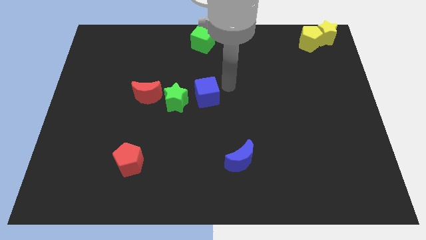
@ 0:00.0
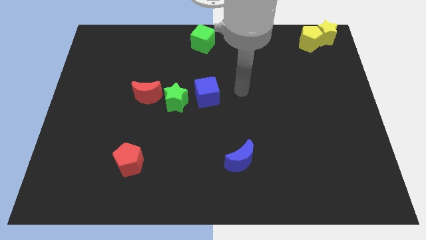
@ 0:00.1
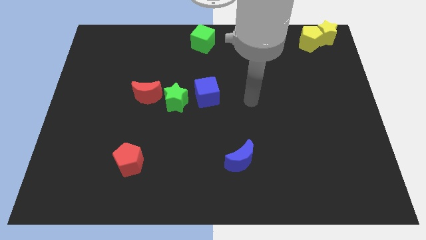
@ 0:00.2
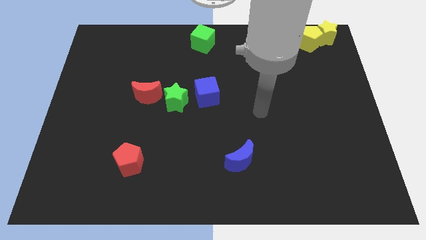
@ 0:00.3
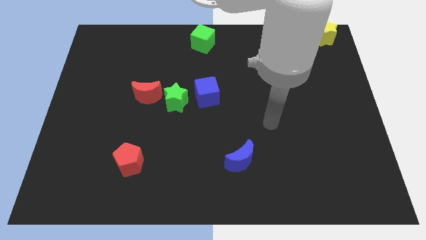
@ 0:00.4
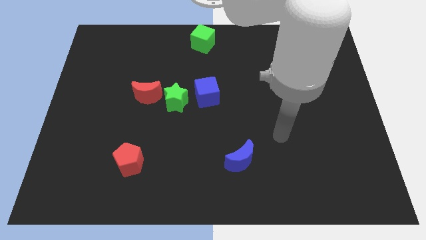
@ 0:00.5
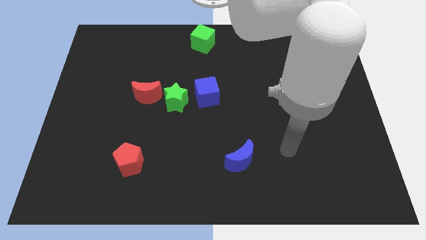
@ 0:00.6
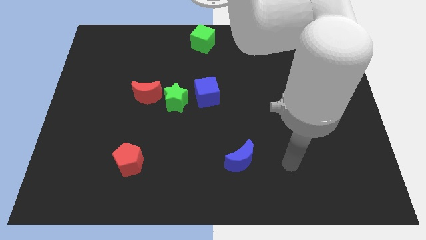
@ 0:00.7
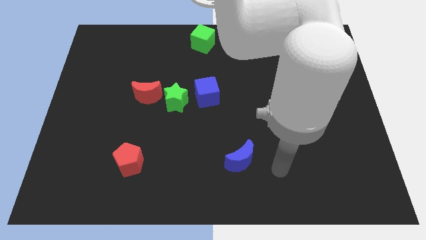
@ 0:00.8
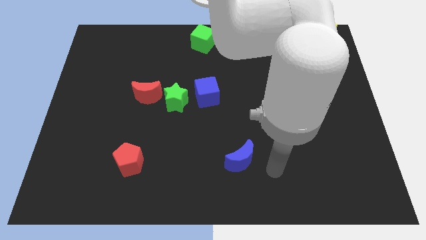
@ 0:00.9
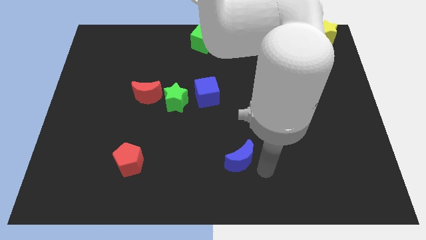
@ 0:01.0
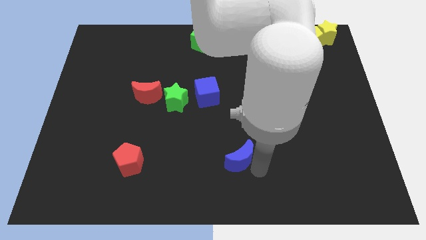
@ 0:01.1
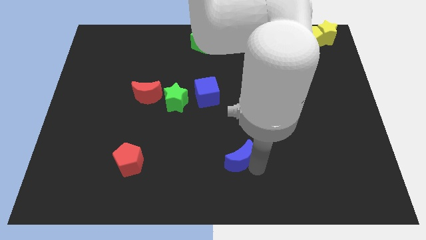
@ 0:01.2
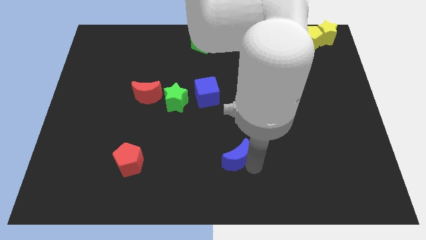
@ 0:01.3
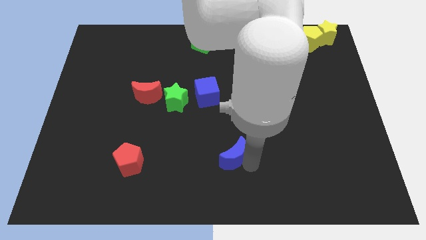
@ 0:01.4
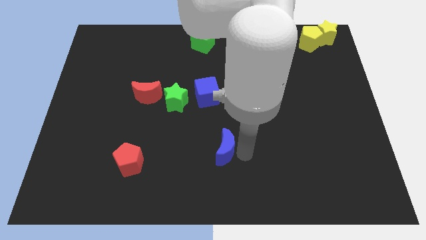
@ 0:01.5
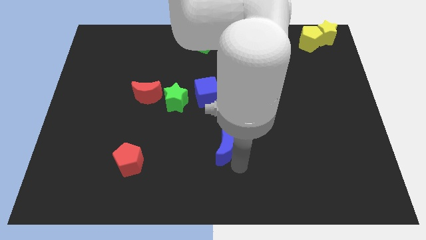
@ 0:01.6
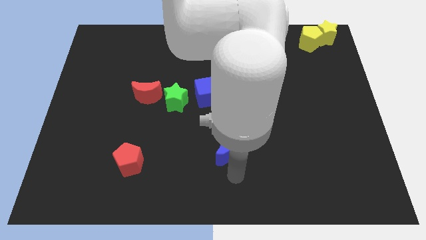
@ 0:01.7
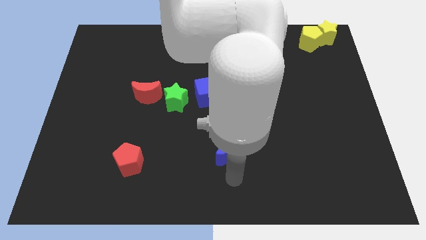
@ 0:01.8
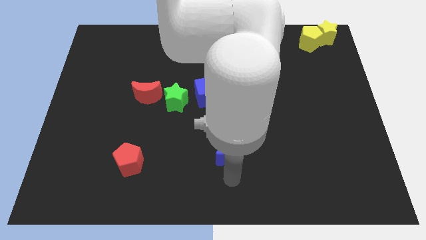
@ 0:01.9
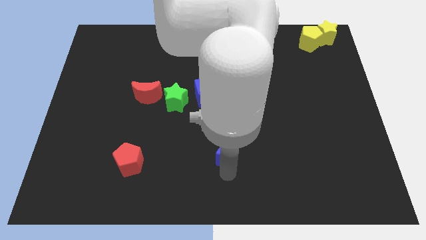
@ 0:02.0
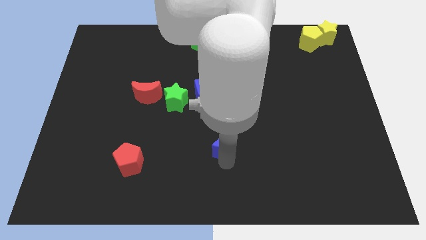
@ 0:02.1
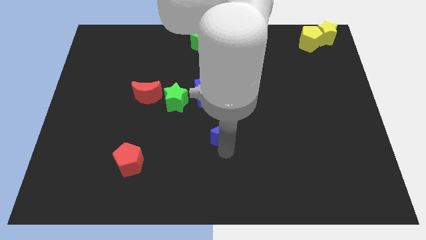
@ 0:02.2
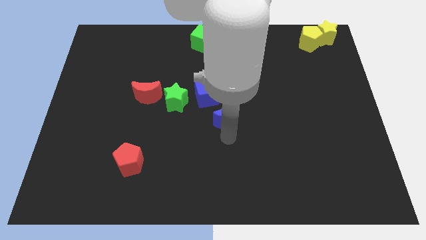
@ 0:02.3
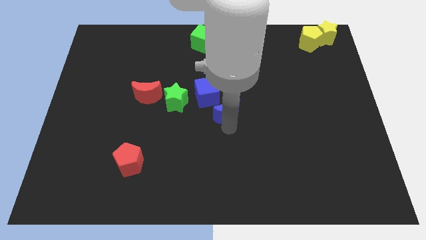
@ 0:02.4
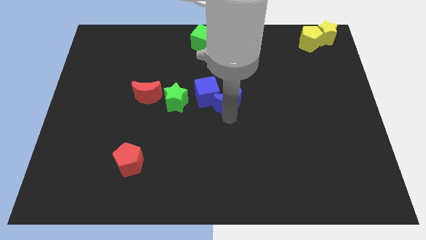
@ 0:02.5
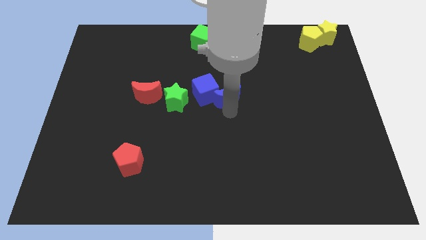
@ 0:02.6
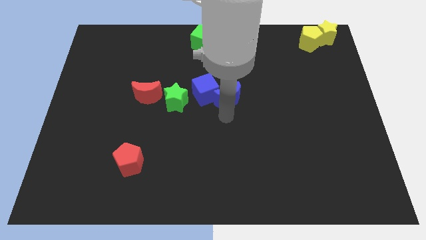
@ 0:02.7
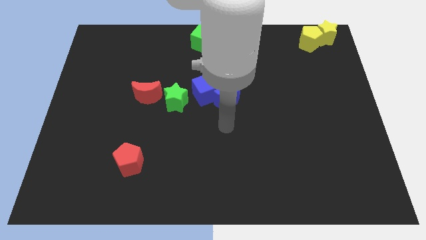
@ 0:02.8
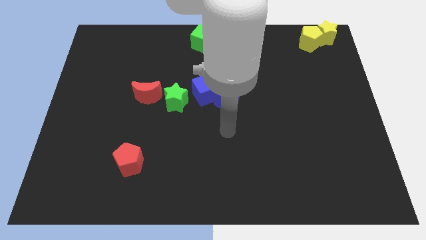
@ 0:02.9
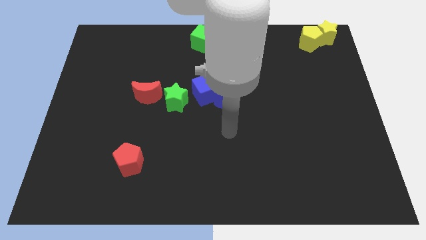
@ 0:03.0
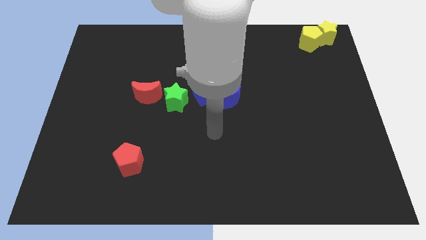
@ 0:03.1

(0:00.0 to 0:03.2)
move blue moon towards blue cube

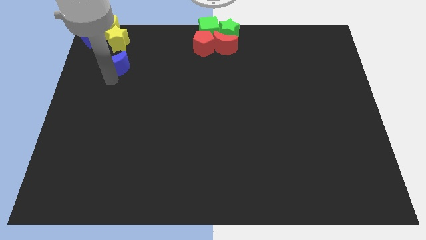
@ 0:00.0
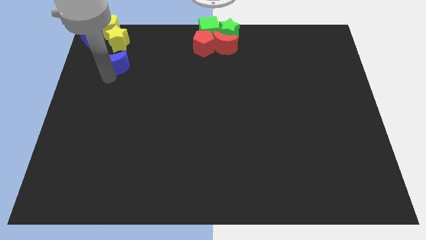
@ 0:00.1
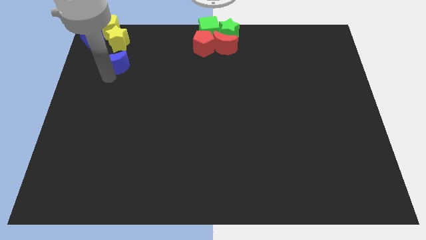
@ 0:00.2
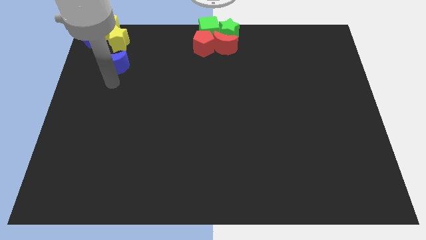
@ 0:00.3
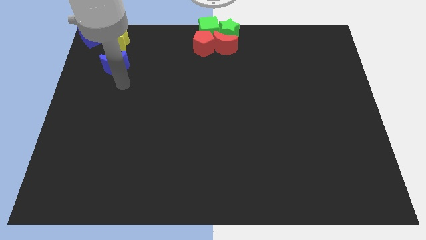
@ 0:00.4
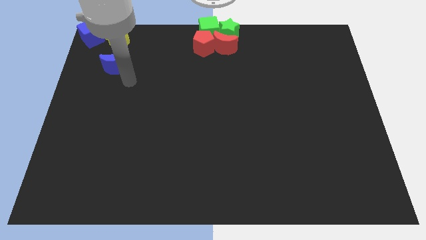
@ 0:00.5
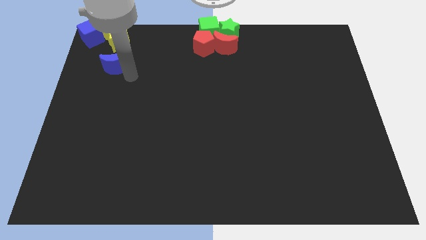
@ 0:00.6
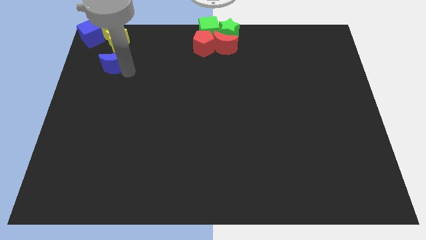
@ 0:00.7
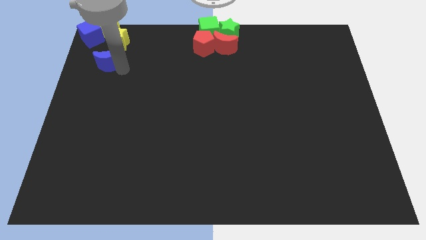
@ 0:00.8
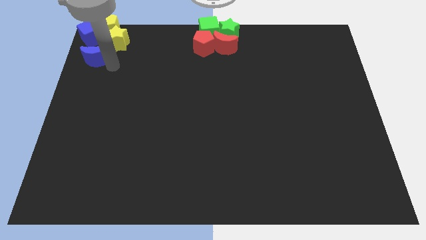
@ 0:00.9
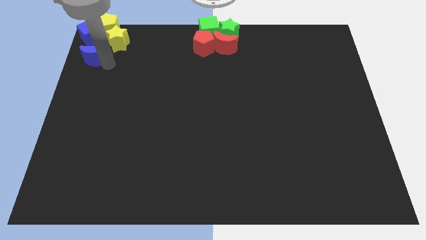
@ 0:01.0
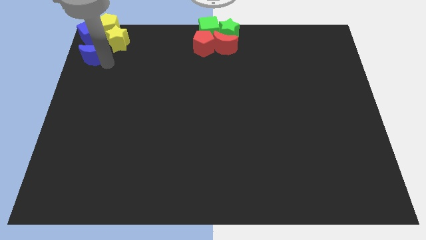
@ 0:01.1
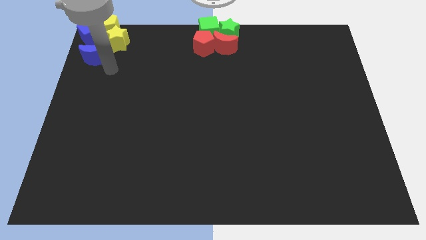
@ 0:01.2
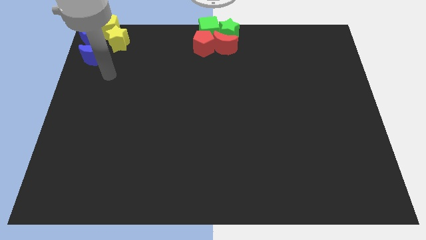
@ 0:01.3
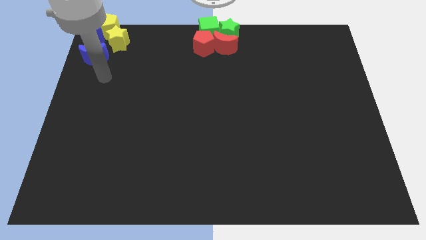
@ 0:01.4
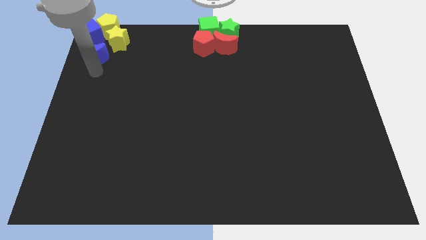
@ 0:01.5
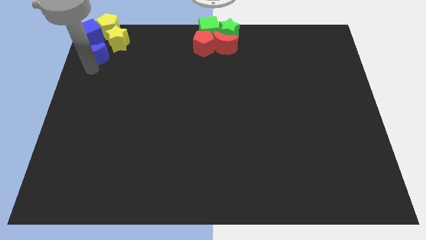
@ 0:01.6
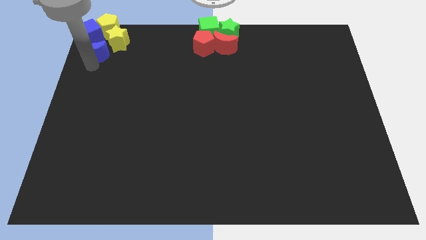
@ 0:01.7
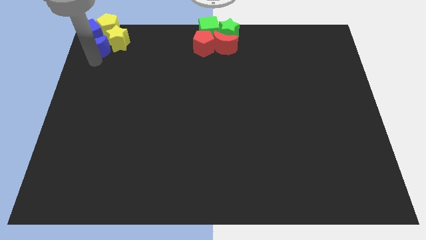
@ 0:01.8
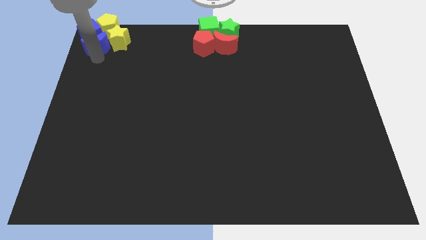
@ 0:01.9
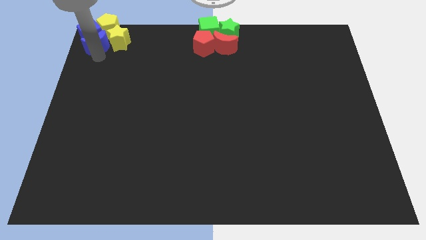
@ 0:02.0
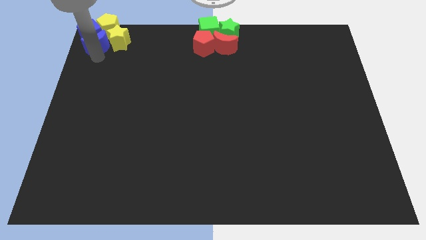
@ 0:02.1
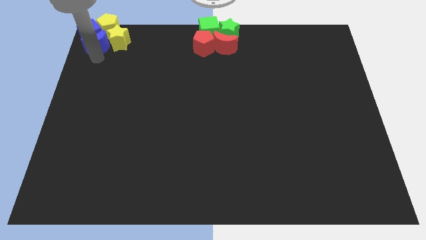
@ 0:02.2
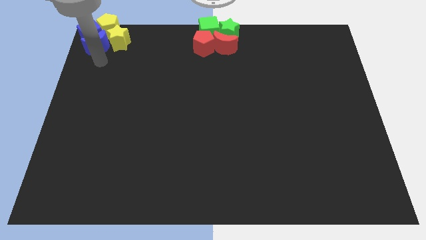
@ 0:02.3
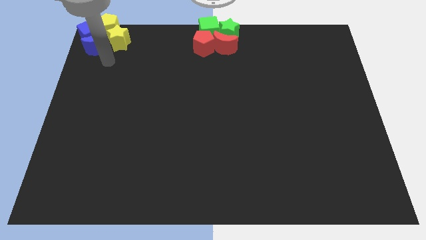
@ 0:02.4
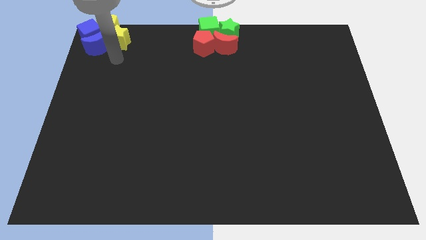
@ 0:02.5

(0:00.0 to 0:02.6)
place the blue moon to the bottom of blue cube

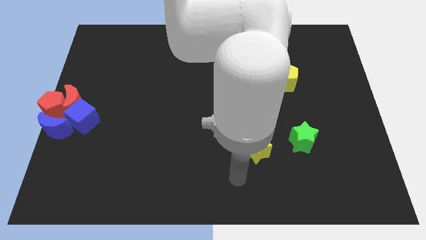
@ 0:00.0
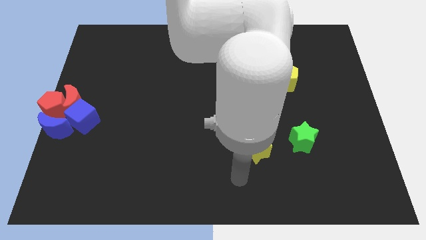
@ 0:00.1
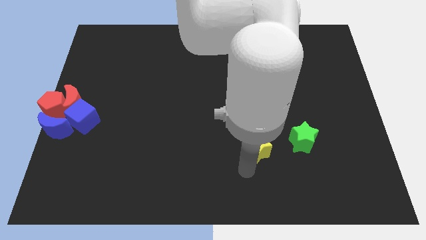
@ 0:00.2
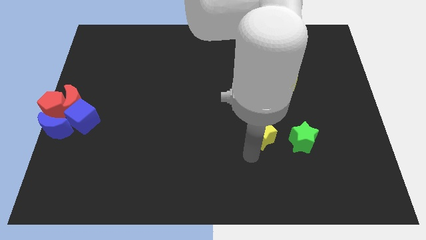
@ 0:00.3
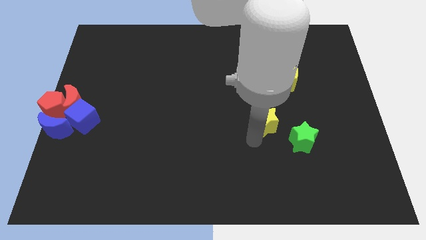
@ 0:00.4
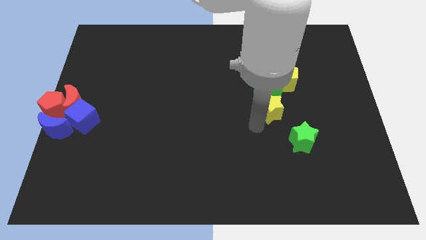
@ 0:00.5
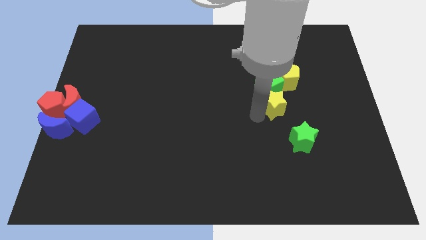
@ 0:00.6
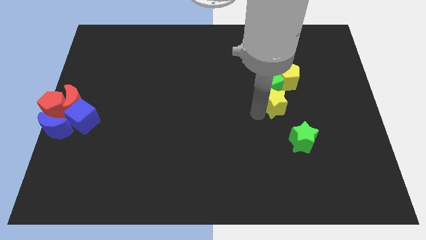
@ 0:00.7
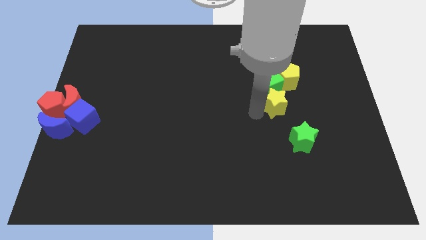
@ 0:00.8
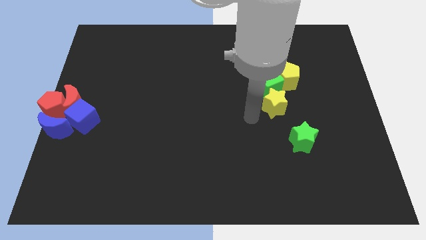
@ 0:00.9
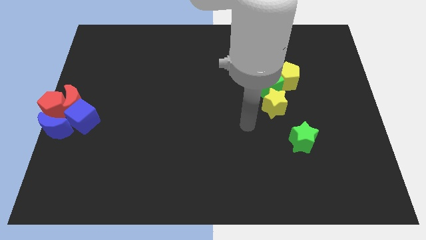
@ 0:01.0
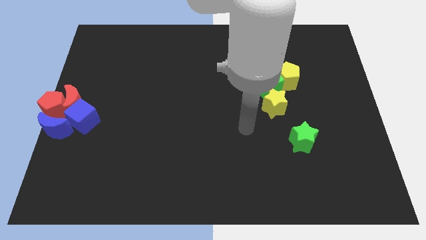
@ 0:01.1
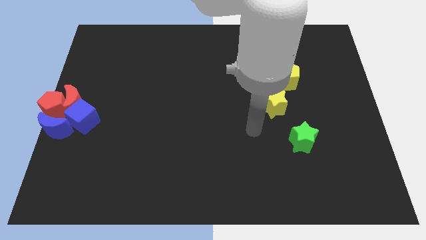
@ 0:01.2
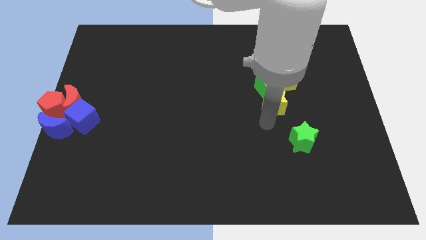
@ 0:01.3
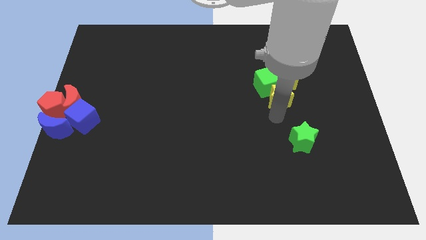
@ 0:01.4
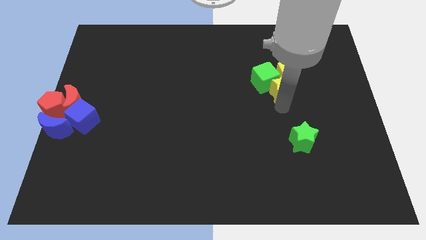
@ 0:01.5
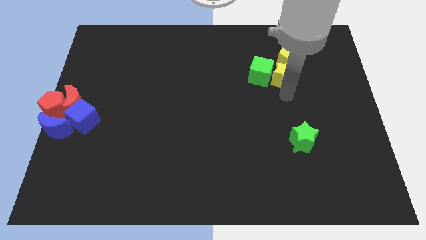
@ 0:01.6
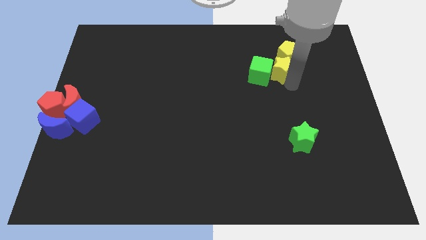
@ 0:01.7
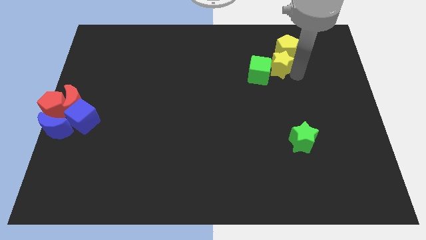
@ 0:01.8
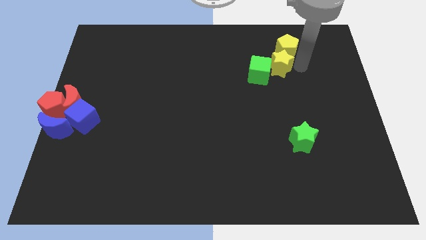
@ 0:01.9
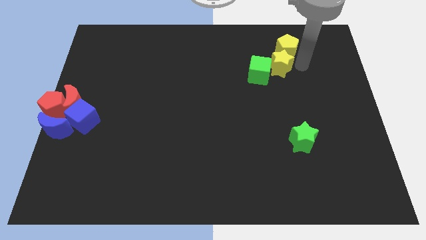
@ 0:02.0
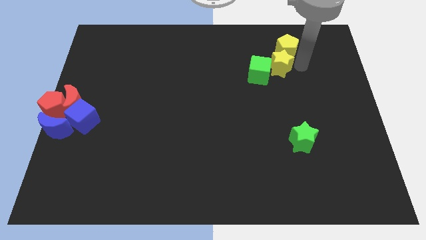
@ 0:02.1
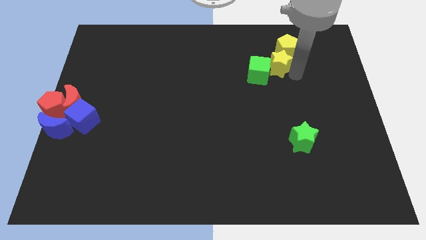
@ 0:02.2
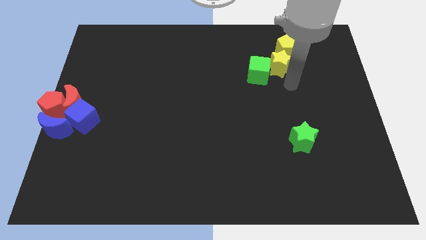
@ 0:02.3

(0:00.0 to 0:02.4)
move the yellow star in between the green cube and the yellow pentagon

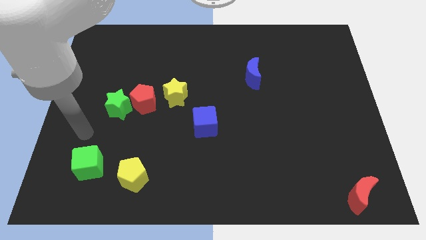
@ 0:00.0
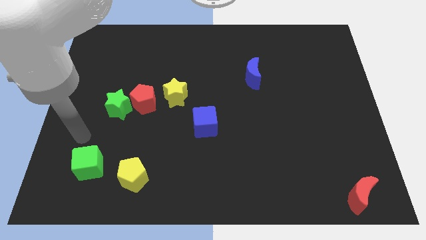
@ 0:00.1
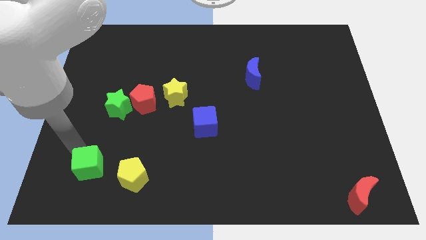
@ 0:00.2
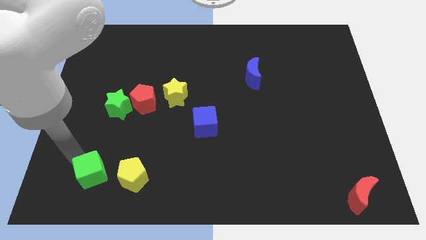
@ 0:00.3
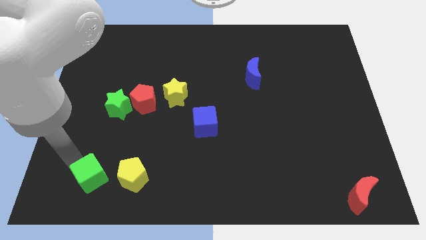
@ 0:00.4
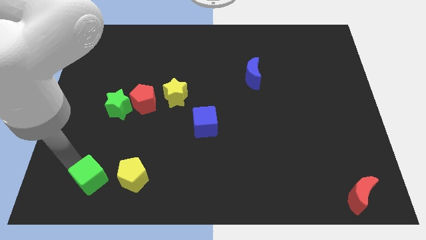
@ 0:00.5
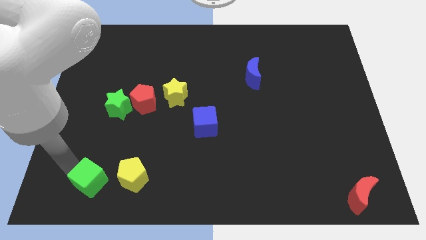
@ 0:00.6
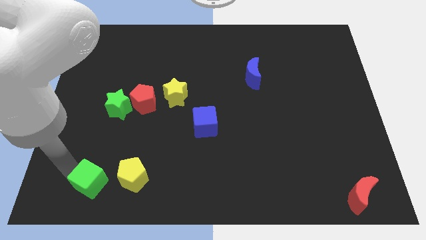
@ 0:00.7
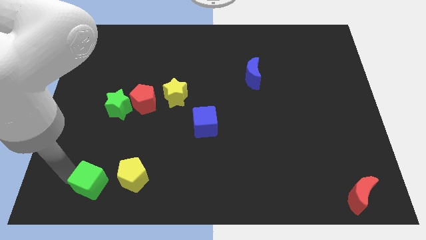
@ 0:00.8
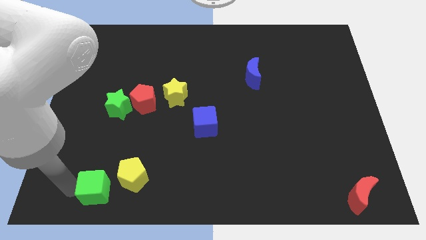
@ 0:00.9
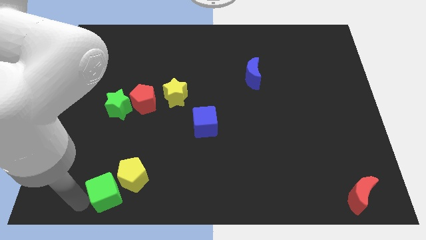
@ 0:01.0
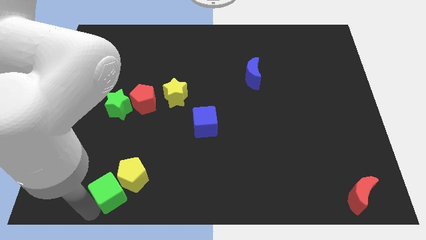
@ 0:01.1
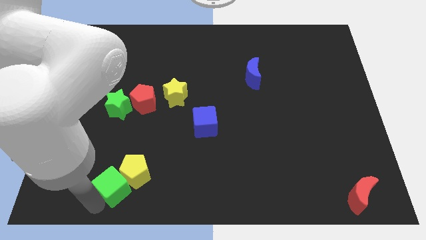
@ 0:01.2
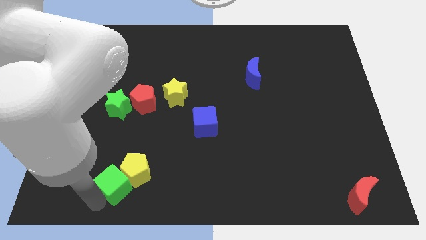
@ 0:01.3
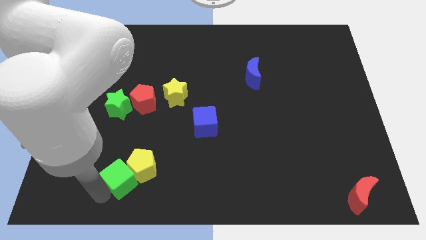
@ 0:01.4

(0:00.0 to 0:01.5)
move the green cube to the left of the yellow pentagon
